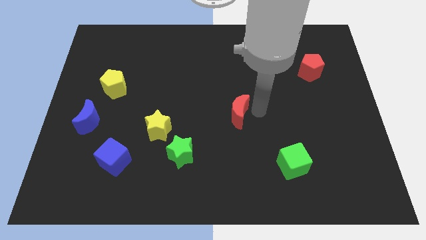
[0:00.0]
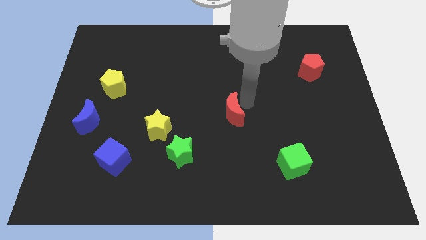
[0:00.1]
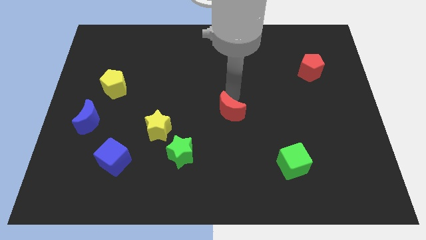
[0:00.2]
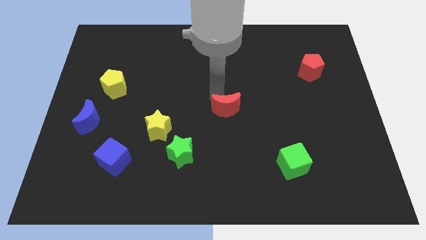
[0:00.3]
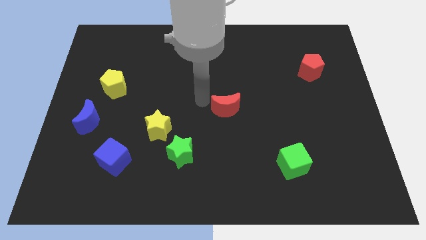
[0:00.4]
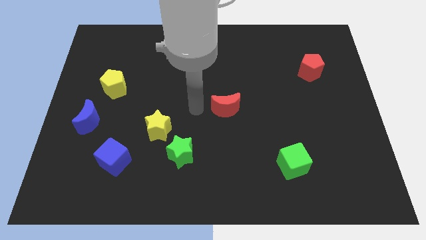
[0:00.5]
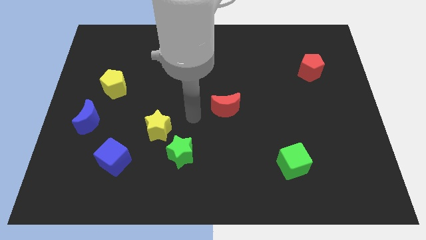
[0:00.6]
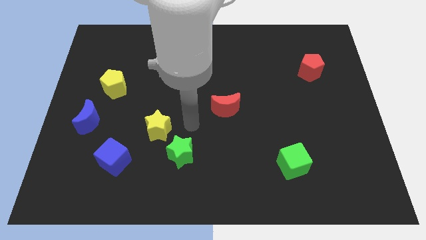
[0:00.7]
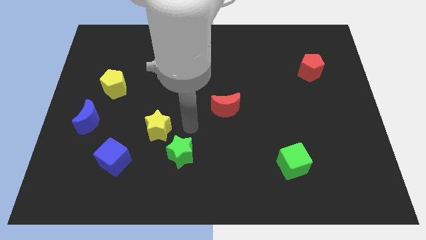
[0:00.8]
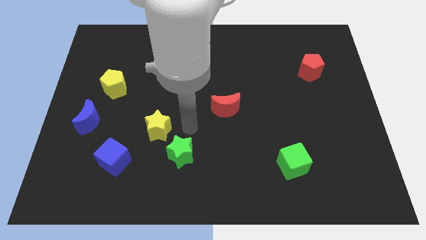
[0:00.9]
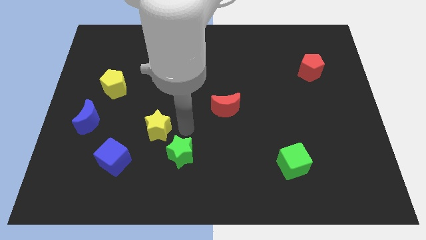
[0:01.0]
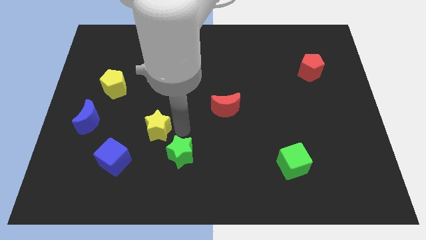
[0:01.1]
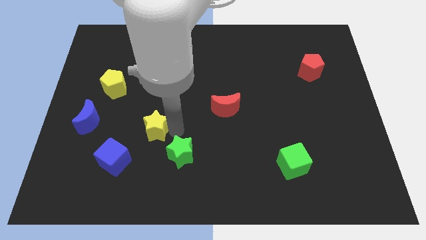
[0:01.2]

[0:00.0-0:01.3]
slide the red moon to the left

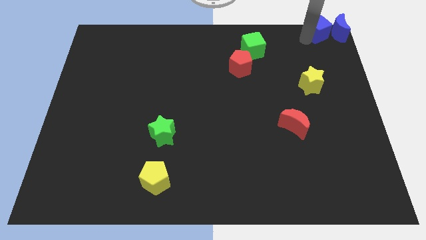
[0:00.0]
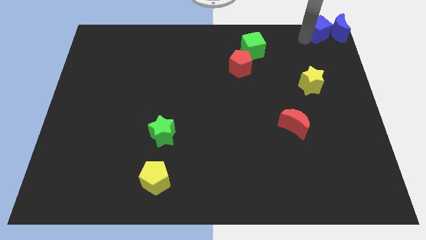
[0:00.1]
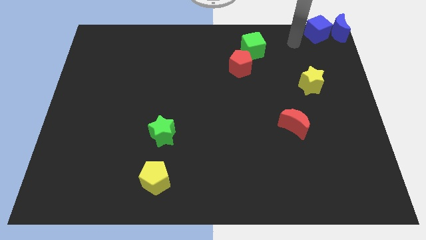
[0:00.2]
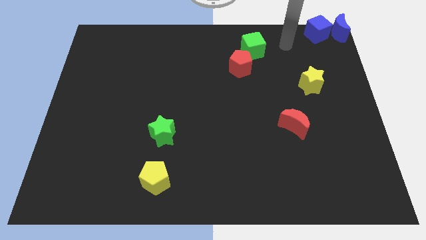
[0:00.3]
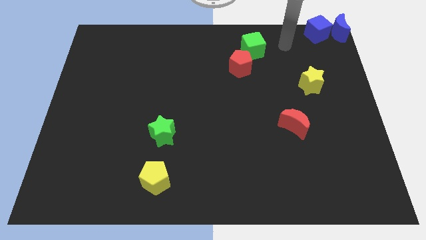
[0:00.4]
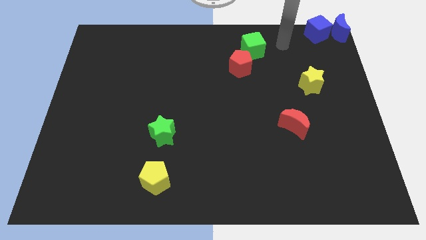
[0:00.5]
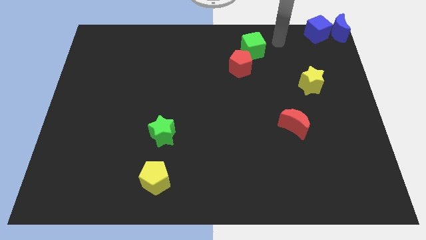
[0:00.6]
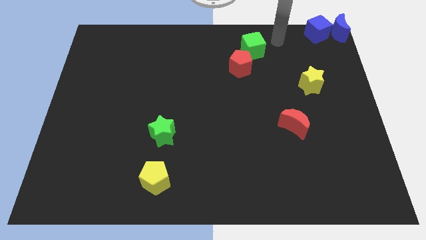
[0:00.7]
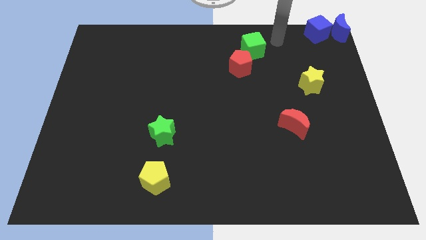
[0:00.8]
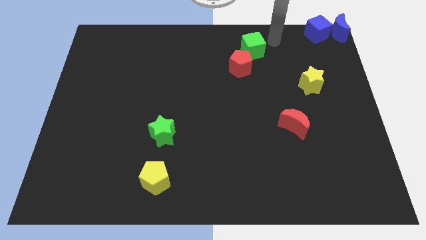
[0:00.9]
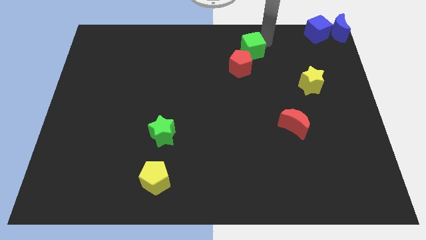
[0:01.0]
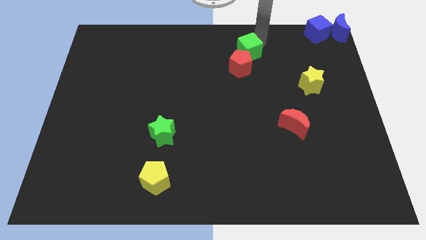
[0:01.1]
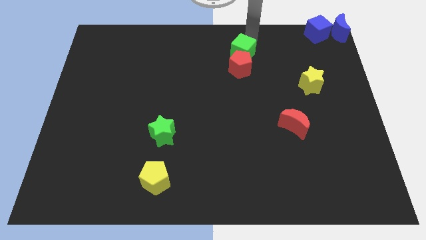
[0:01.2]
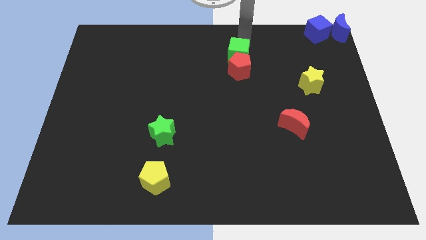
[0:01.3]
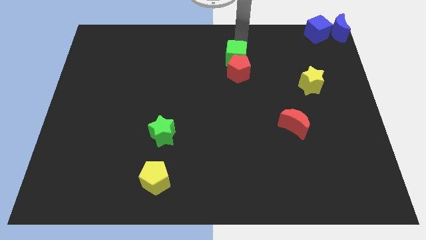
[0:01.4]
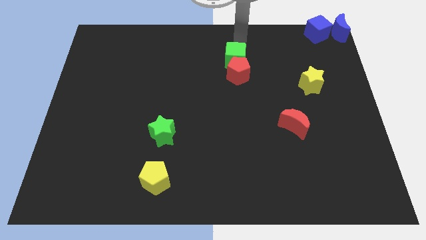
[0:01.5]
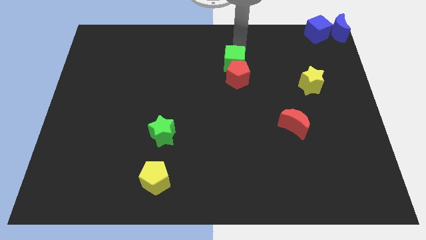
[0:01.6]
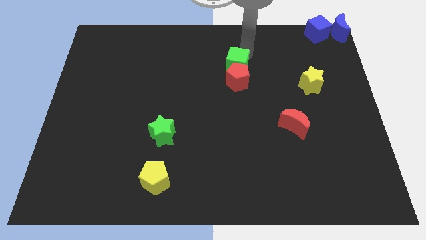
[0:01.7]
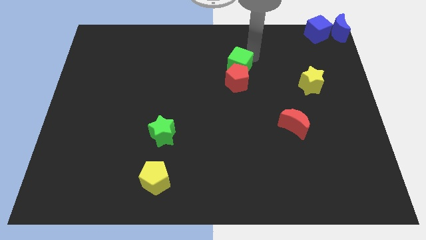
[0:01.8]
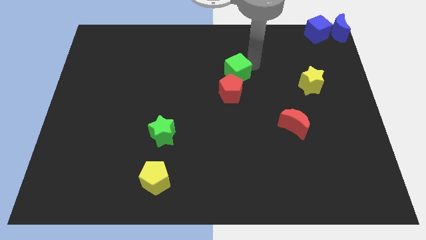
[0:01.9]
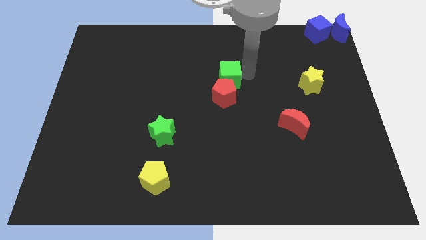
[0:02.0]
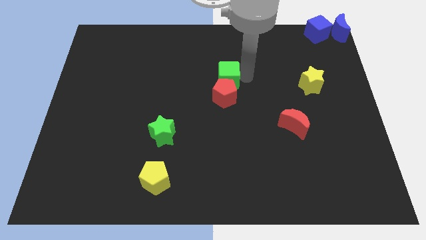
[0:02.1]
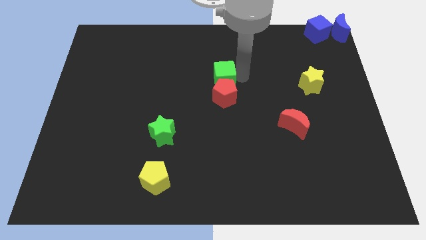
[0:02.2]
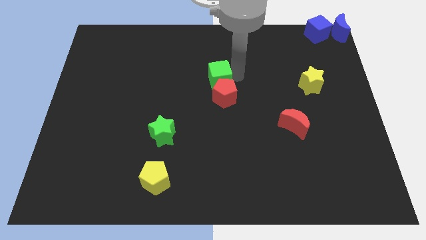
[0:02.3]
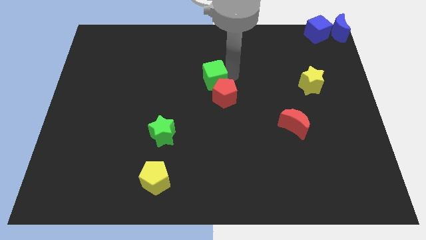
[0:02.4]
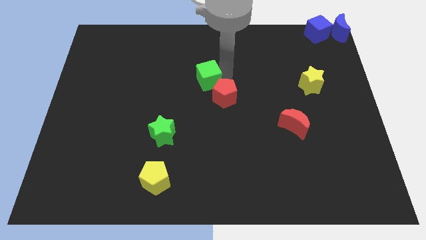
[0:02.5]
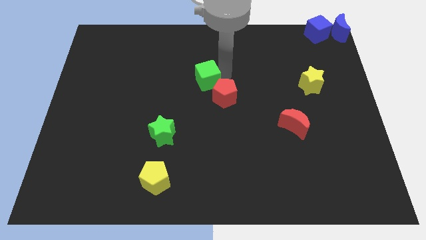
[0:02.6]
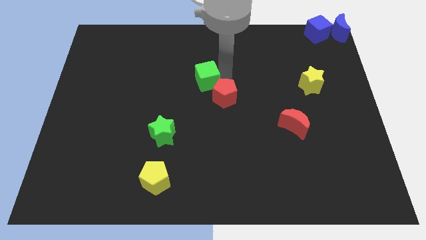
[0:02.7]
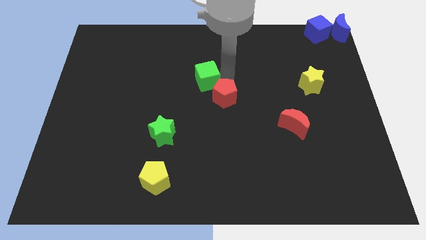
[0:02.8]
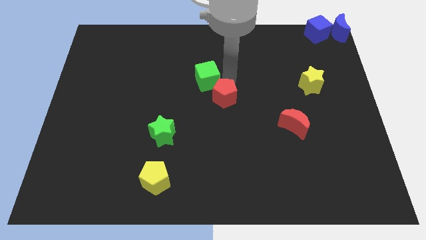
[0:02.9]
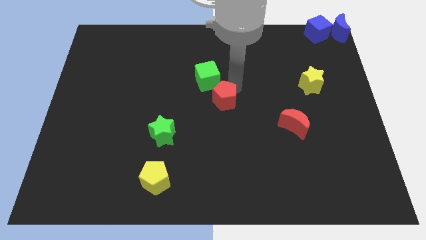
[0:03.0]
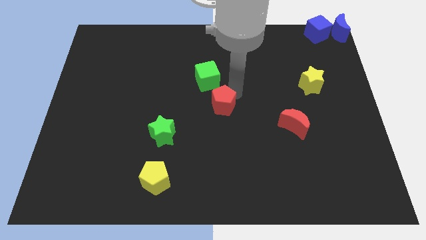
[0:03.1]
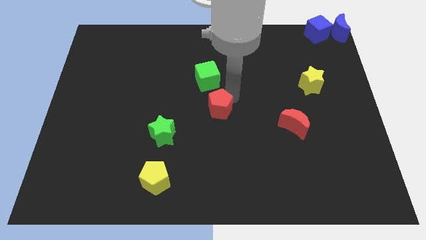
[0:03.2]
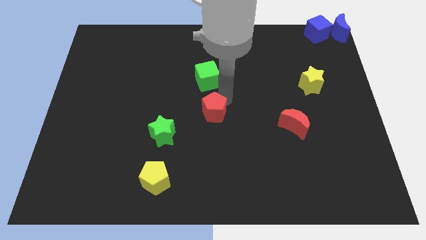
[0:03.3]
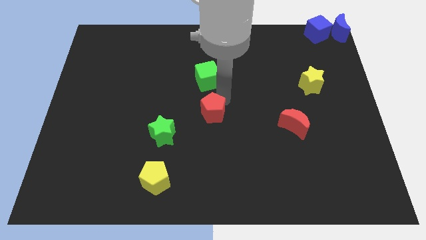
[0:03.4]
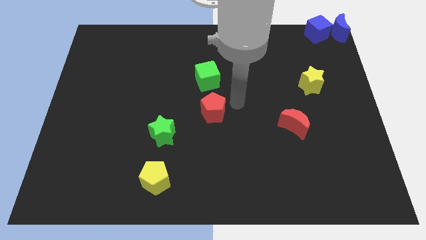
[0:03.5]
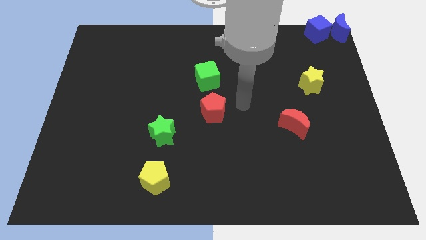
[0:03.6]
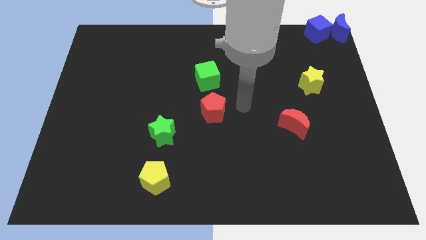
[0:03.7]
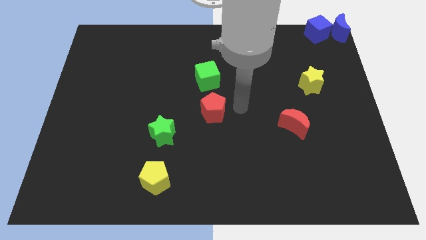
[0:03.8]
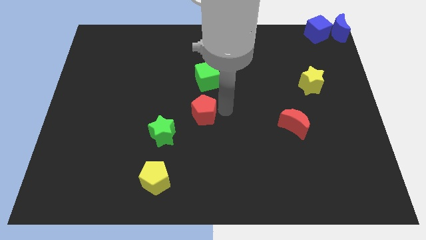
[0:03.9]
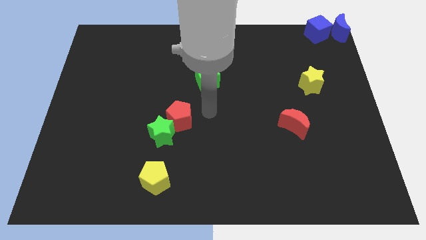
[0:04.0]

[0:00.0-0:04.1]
push the red pentagon towards the green star

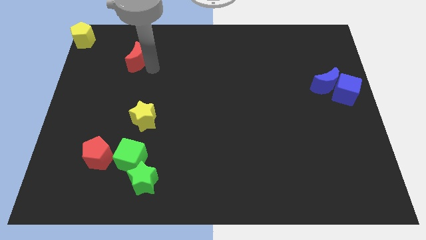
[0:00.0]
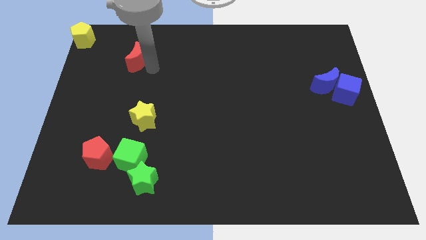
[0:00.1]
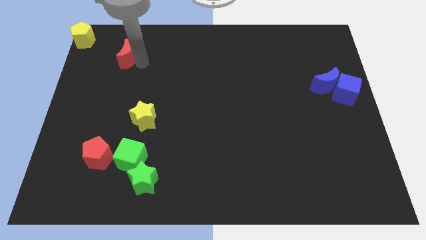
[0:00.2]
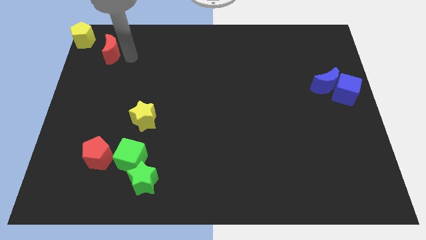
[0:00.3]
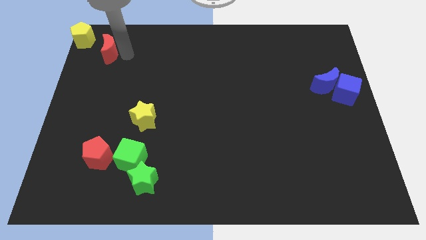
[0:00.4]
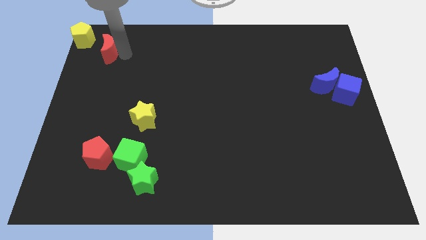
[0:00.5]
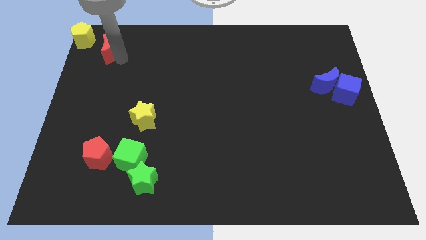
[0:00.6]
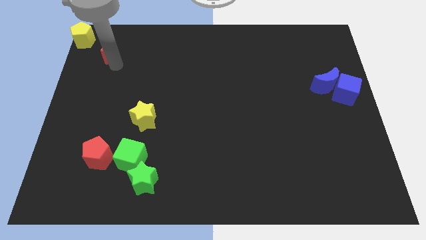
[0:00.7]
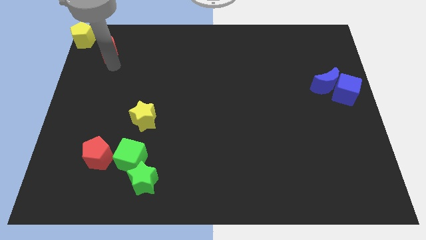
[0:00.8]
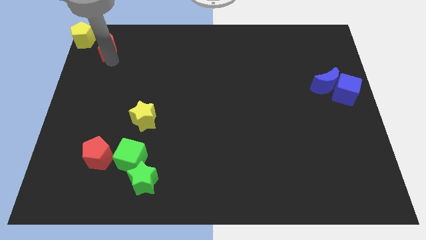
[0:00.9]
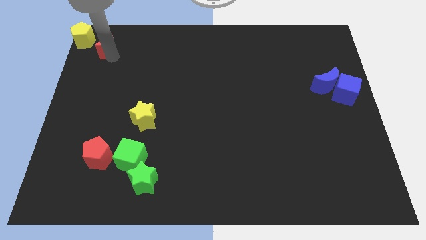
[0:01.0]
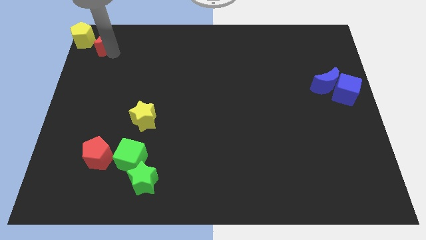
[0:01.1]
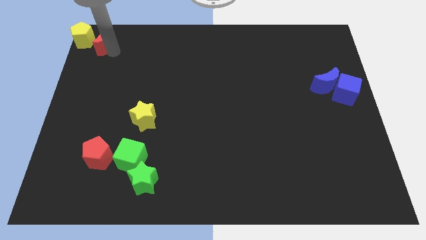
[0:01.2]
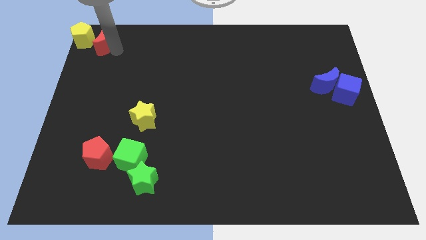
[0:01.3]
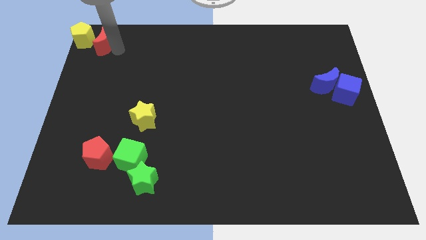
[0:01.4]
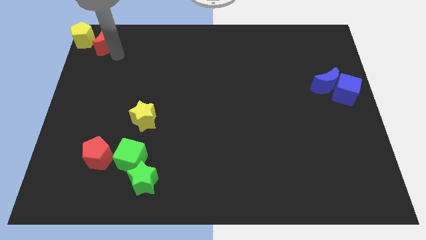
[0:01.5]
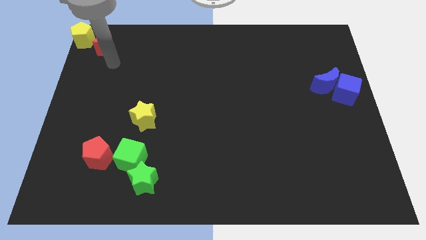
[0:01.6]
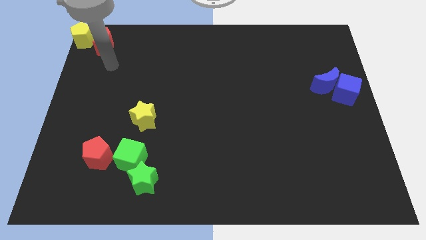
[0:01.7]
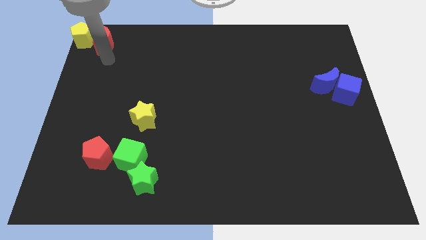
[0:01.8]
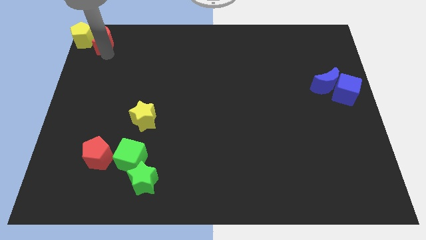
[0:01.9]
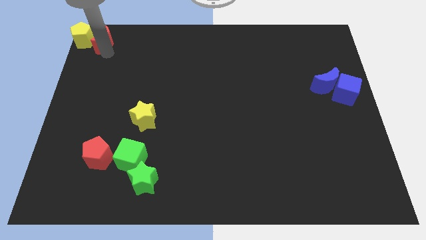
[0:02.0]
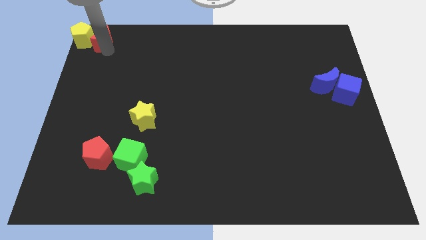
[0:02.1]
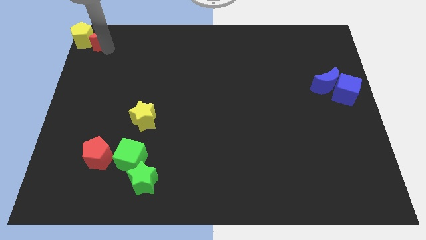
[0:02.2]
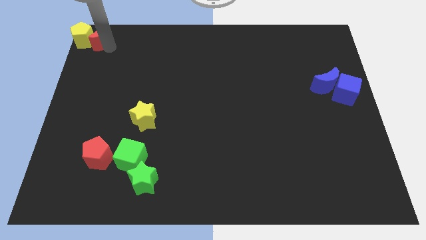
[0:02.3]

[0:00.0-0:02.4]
push the red crescent into the yellow pentagon at the top left corner

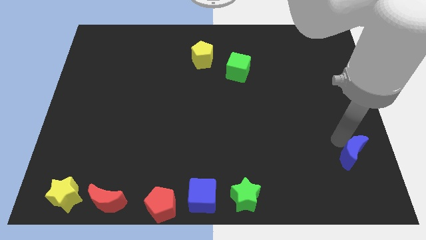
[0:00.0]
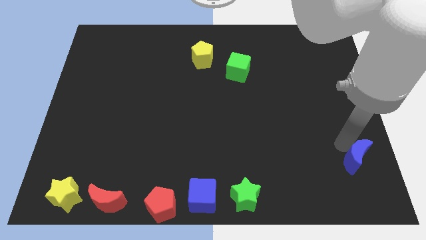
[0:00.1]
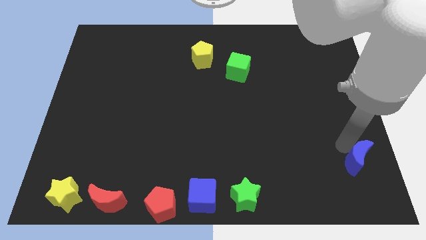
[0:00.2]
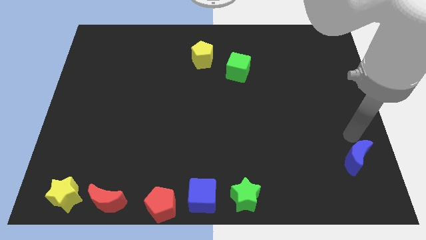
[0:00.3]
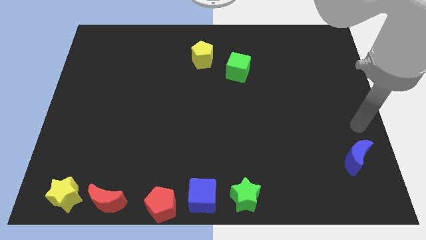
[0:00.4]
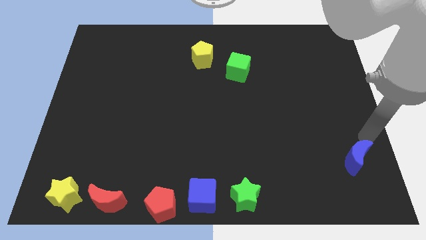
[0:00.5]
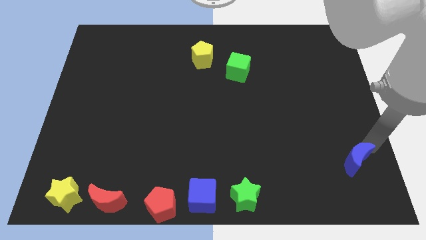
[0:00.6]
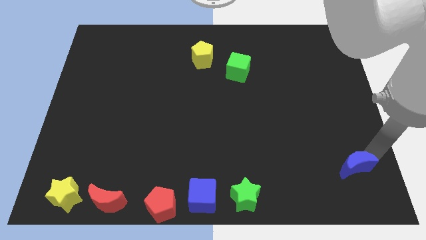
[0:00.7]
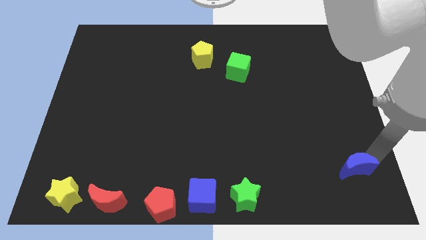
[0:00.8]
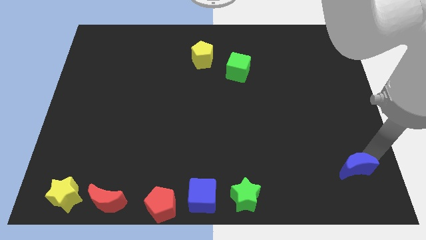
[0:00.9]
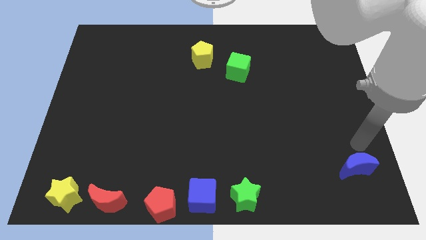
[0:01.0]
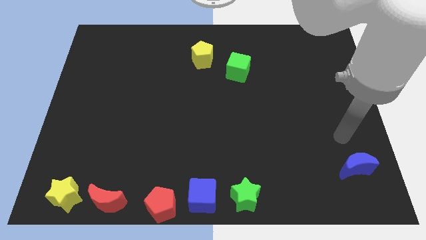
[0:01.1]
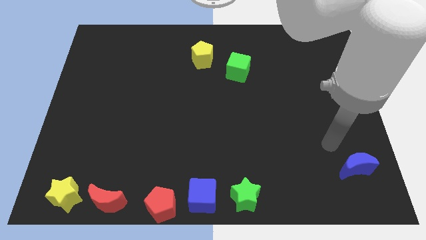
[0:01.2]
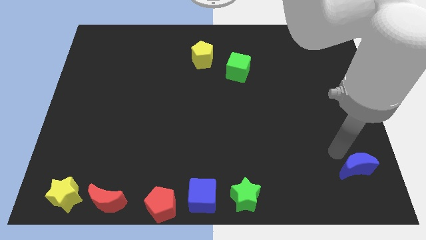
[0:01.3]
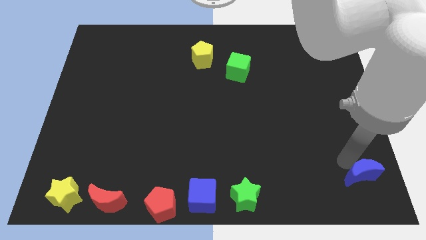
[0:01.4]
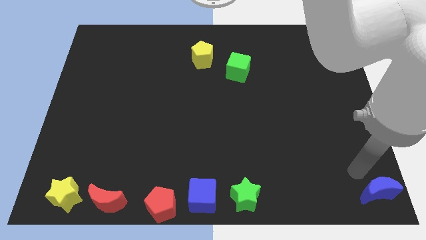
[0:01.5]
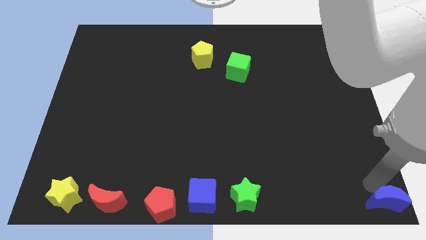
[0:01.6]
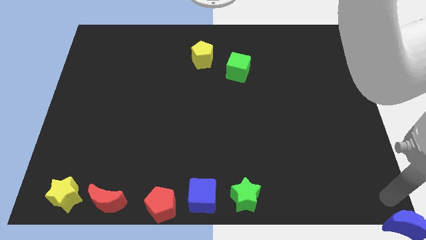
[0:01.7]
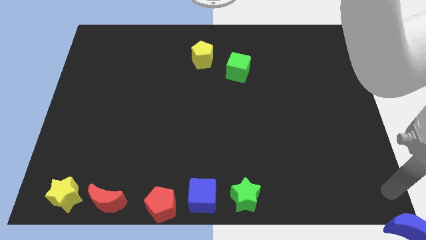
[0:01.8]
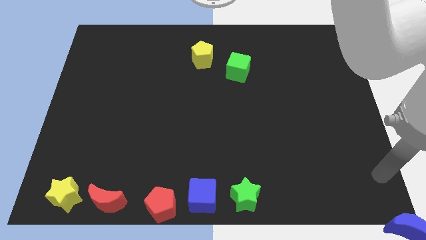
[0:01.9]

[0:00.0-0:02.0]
move the blue moon to the bottom right corner
